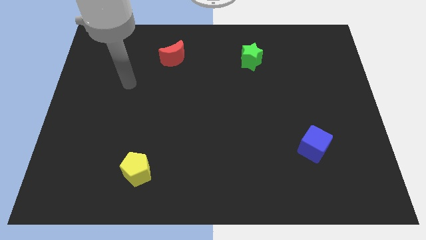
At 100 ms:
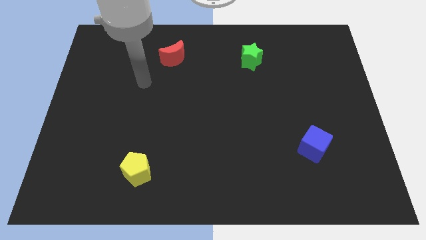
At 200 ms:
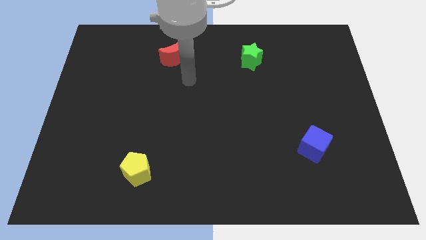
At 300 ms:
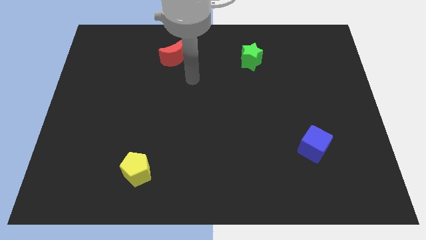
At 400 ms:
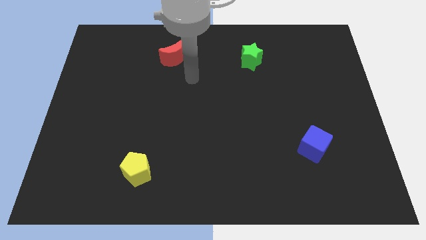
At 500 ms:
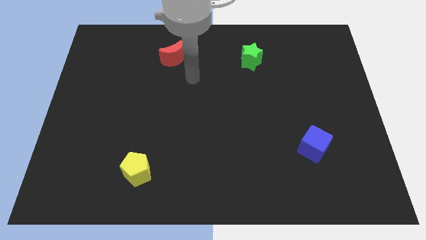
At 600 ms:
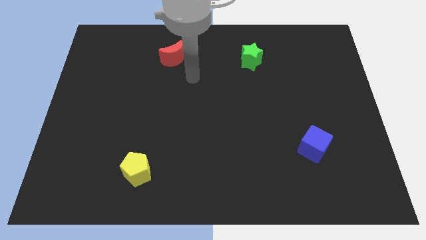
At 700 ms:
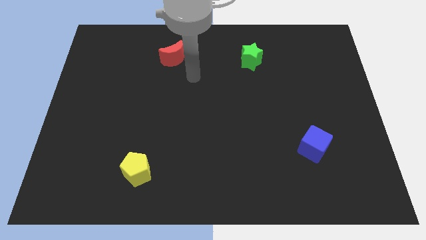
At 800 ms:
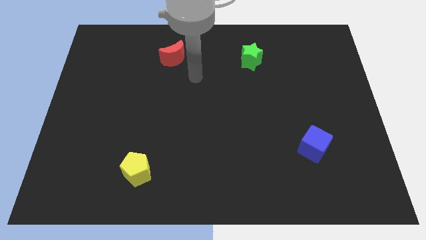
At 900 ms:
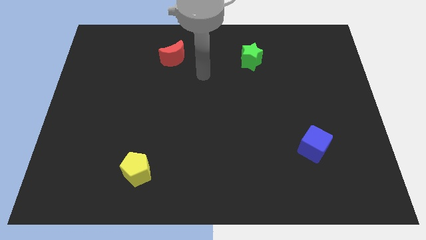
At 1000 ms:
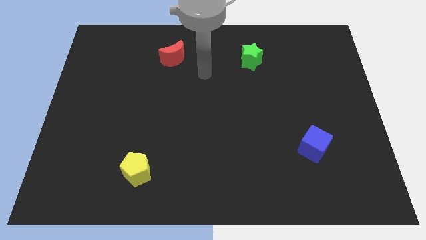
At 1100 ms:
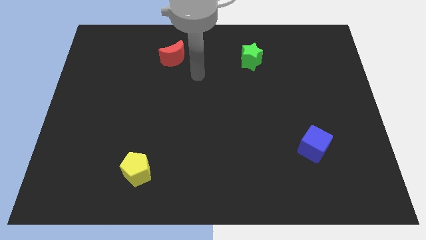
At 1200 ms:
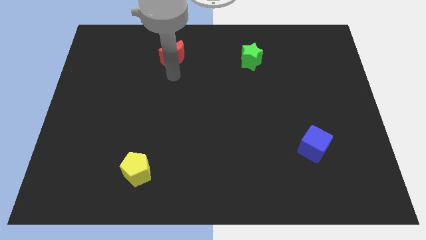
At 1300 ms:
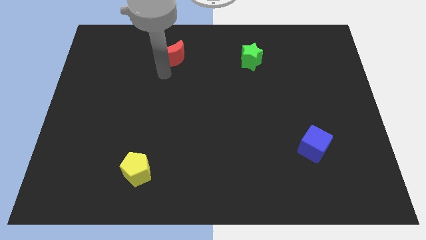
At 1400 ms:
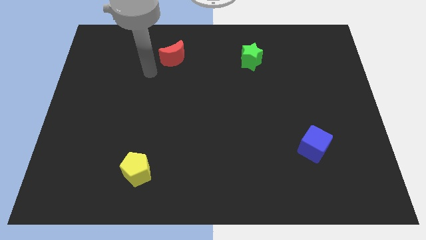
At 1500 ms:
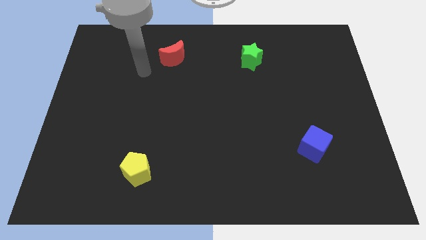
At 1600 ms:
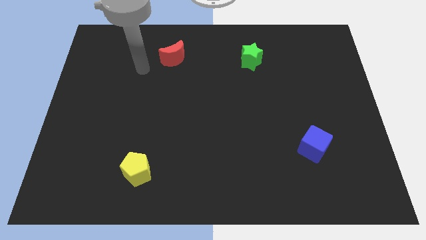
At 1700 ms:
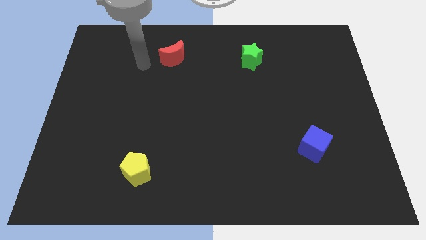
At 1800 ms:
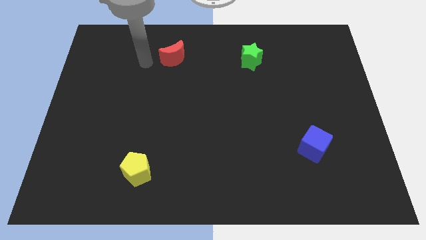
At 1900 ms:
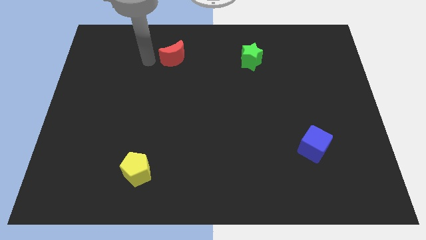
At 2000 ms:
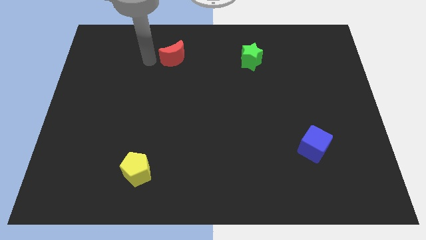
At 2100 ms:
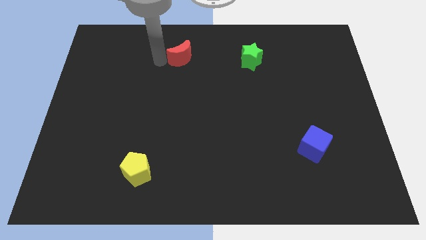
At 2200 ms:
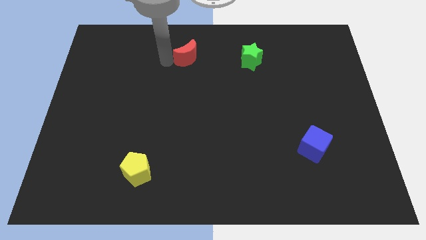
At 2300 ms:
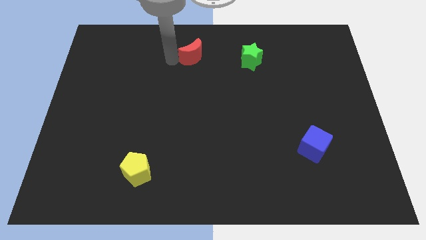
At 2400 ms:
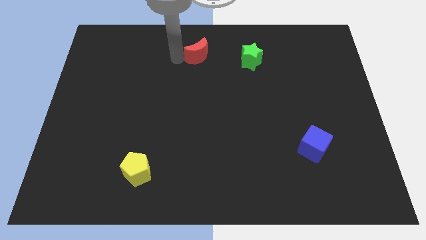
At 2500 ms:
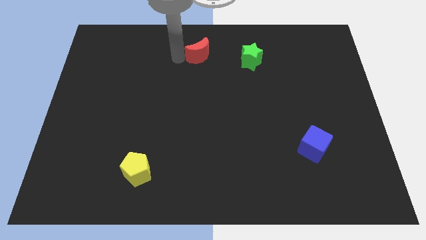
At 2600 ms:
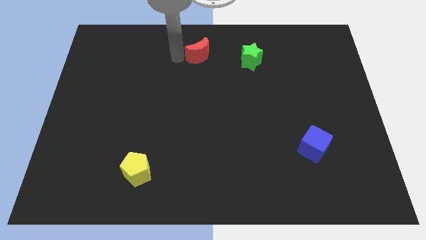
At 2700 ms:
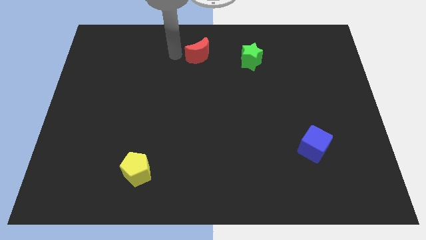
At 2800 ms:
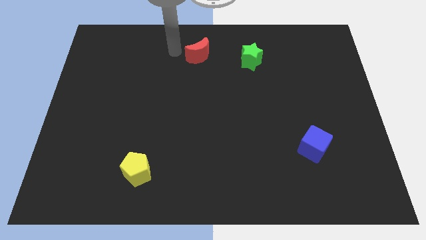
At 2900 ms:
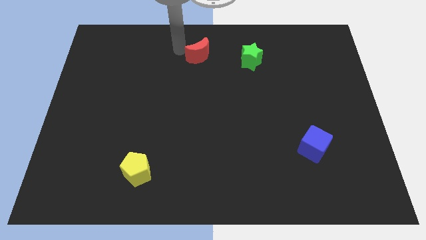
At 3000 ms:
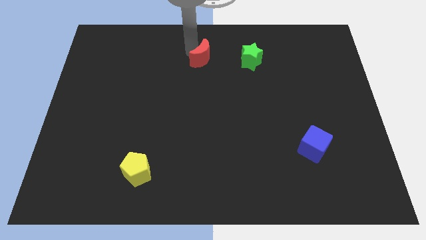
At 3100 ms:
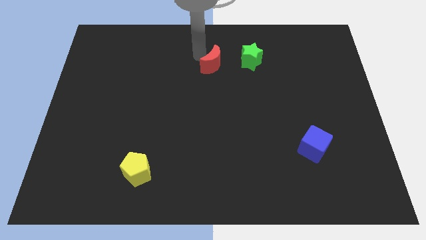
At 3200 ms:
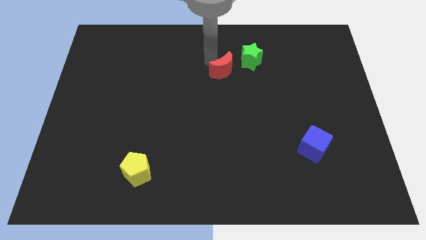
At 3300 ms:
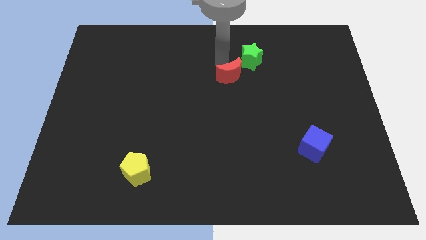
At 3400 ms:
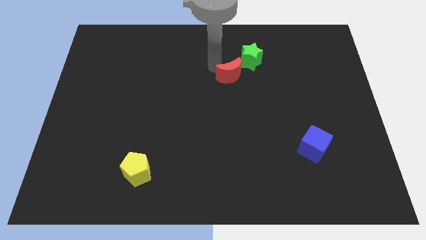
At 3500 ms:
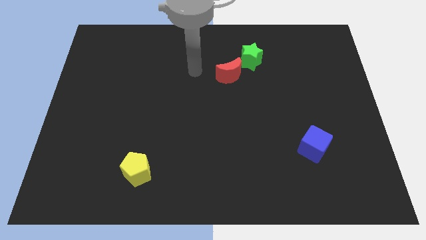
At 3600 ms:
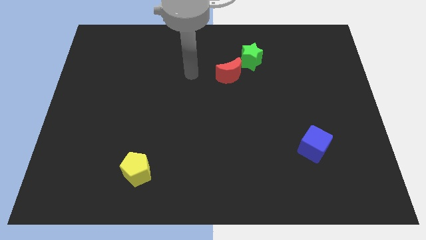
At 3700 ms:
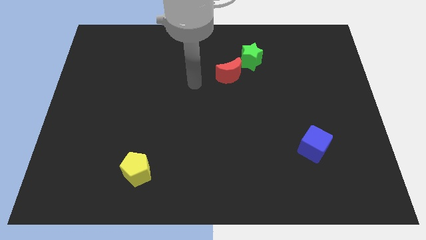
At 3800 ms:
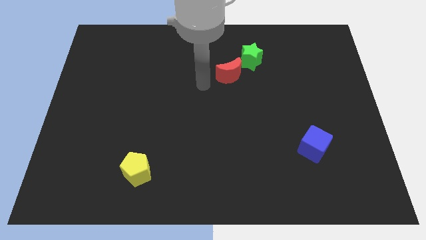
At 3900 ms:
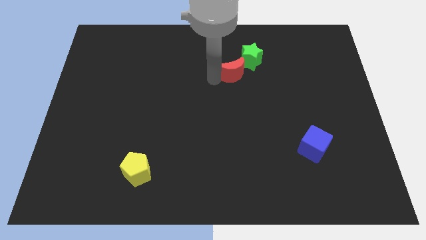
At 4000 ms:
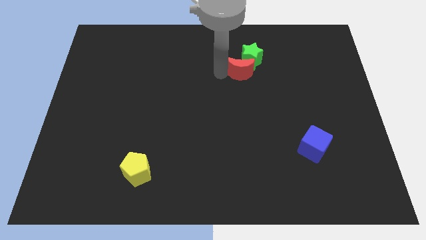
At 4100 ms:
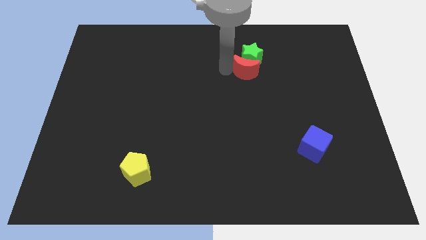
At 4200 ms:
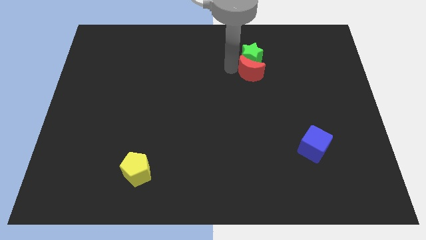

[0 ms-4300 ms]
move the red moon towards the green block

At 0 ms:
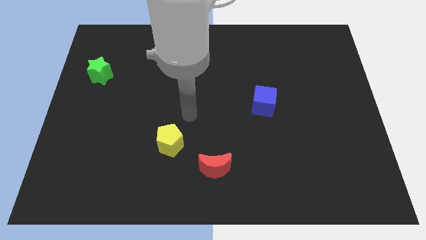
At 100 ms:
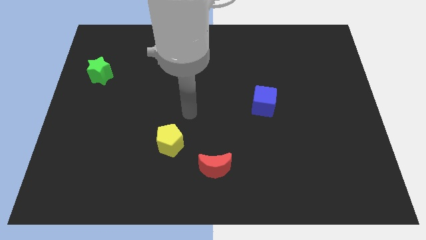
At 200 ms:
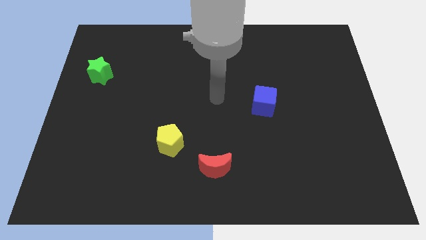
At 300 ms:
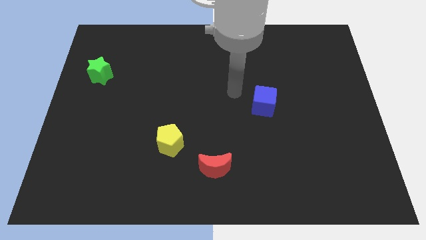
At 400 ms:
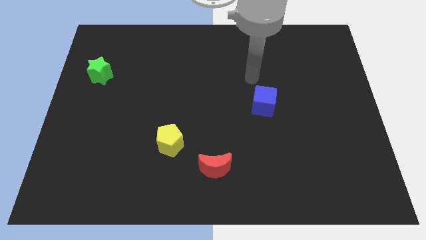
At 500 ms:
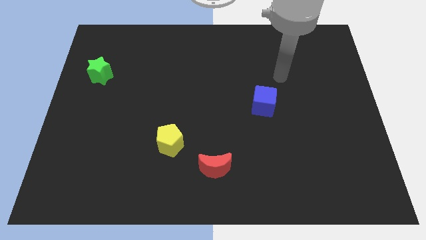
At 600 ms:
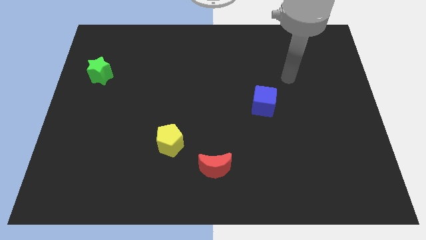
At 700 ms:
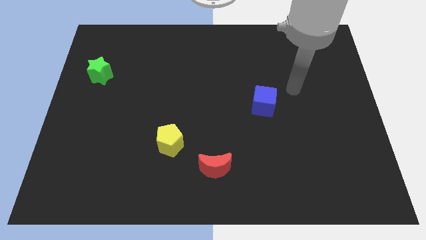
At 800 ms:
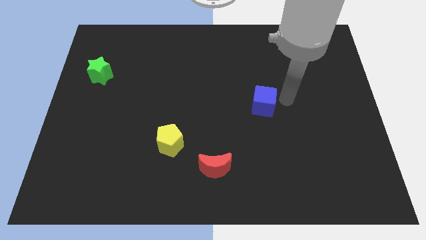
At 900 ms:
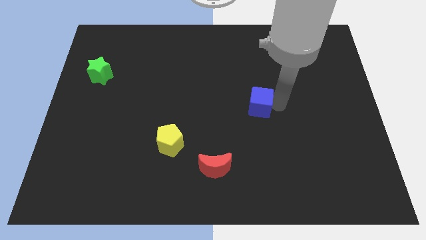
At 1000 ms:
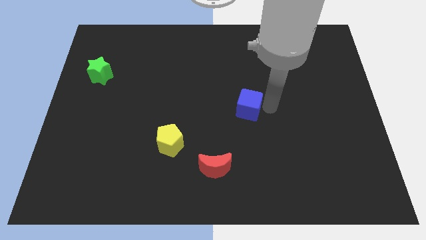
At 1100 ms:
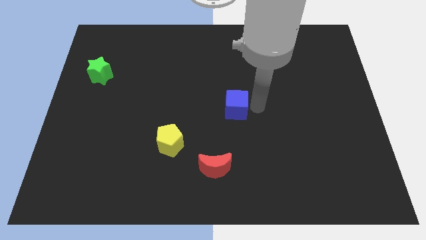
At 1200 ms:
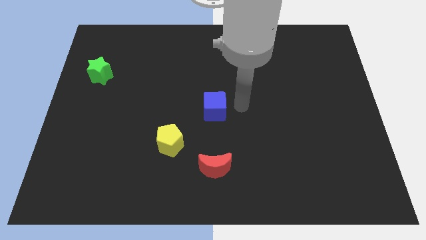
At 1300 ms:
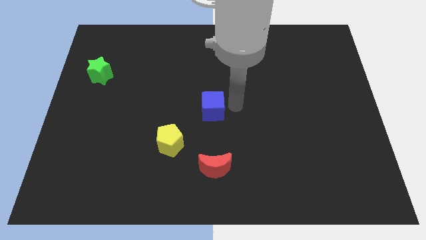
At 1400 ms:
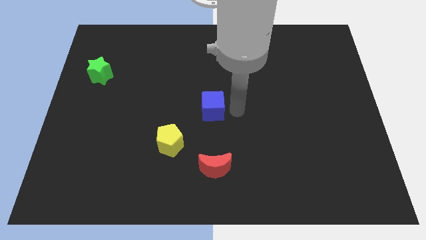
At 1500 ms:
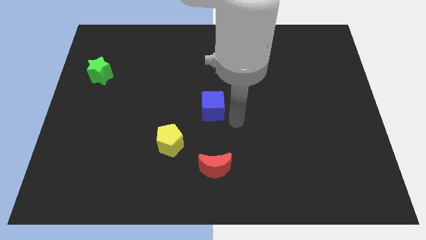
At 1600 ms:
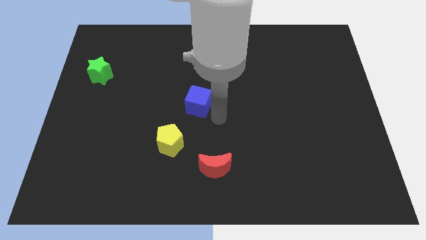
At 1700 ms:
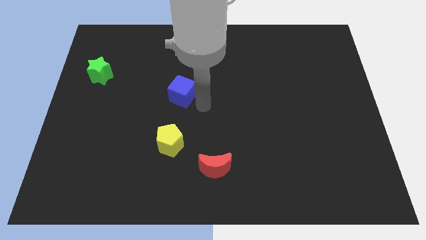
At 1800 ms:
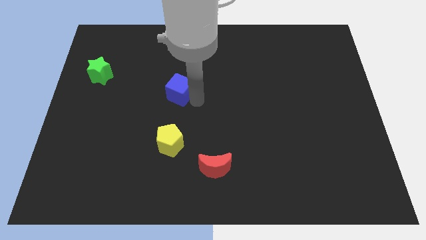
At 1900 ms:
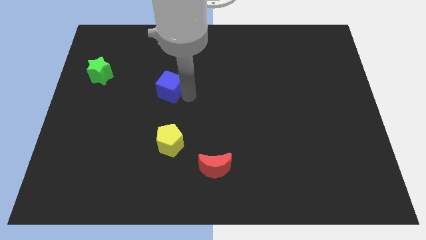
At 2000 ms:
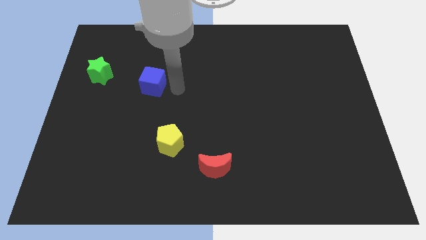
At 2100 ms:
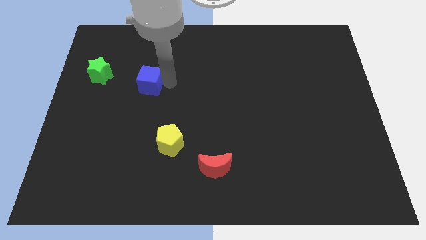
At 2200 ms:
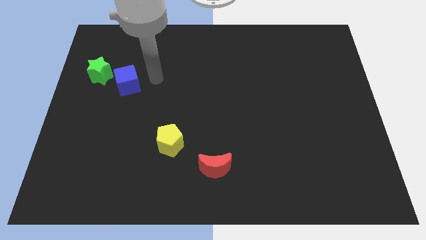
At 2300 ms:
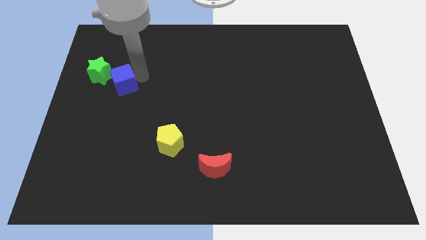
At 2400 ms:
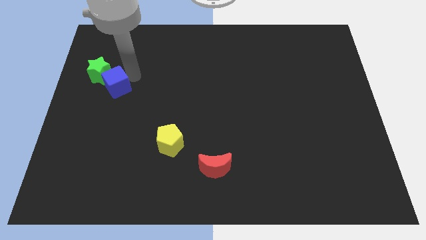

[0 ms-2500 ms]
put the blue block to the star

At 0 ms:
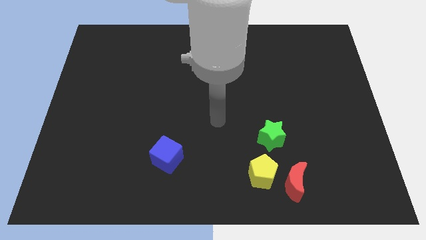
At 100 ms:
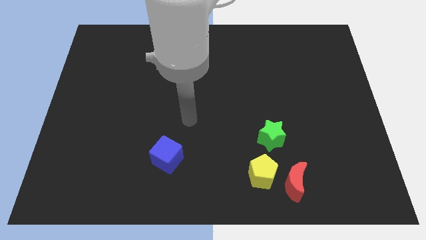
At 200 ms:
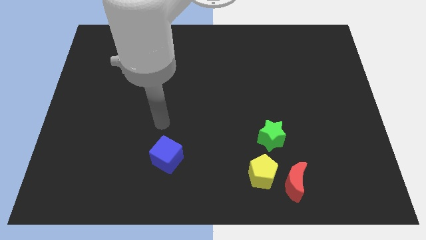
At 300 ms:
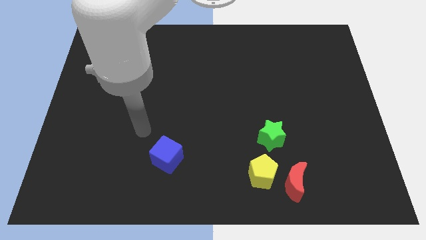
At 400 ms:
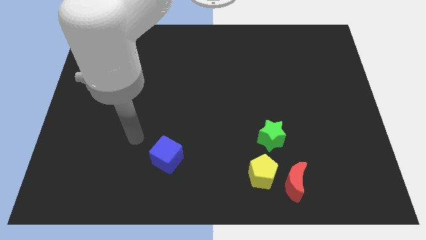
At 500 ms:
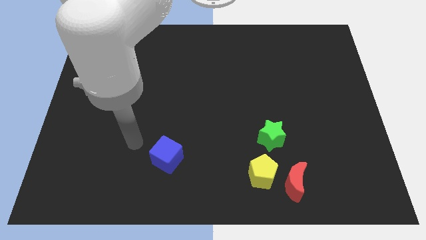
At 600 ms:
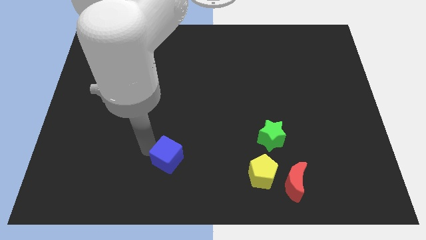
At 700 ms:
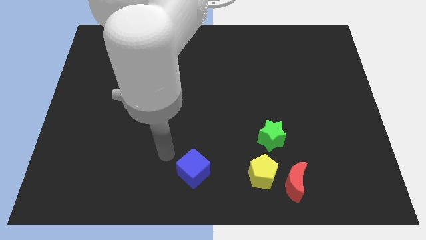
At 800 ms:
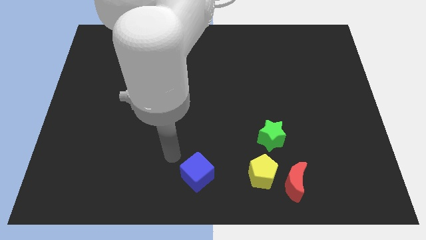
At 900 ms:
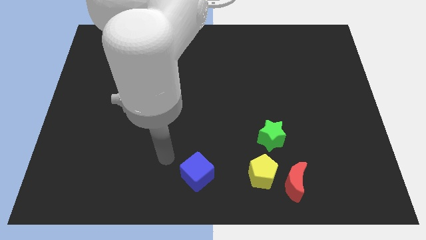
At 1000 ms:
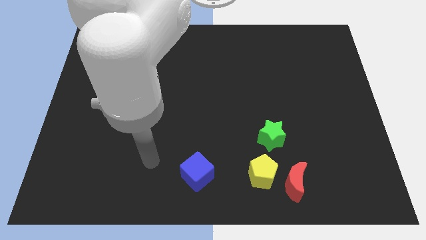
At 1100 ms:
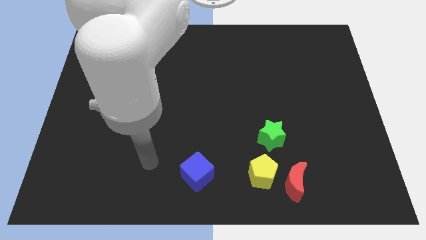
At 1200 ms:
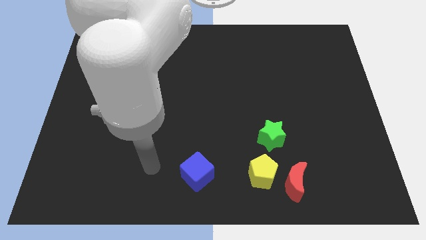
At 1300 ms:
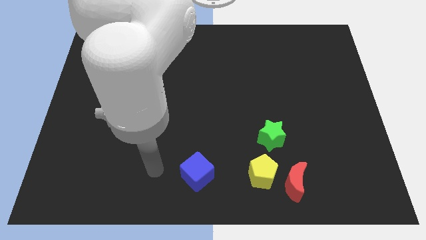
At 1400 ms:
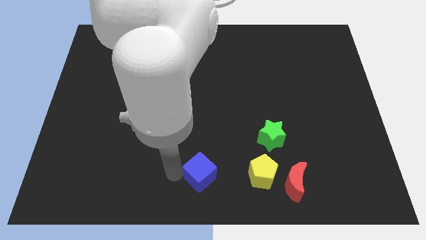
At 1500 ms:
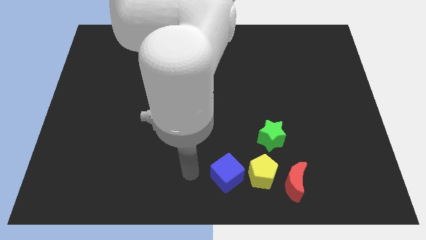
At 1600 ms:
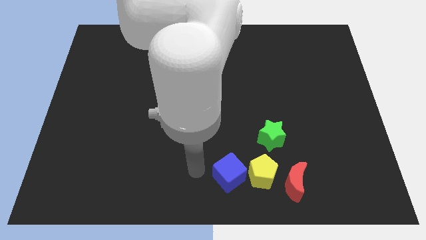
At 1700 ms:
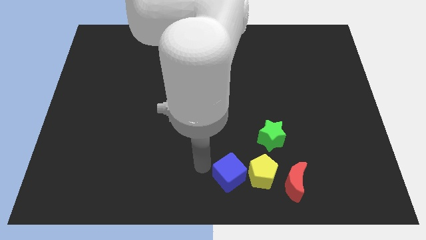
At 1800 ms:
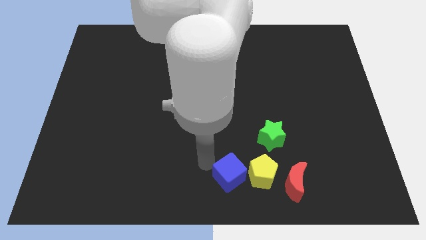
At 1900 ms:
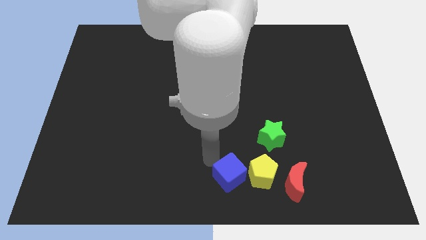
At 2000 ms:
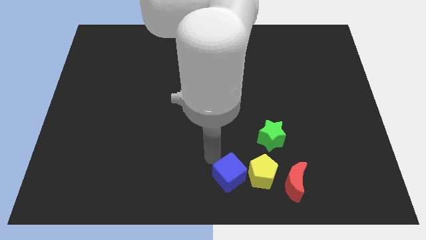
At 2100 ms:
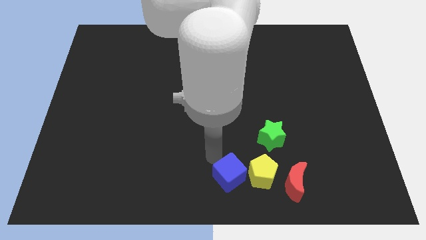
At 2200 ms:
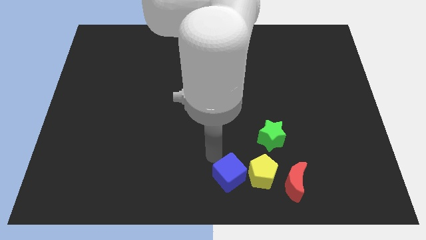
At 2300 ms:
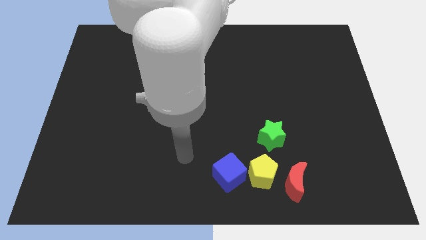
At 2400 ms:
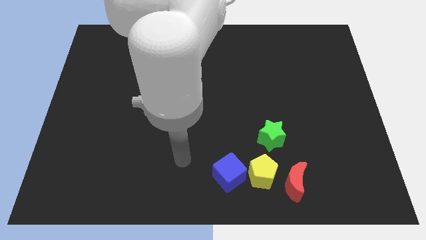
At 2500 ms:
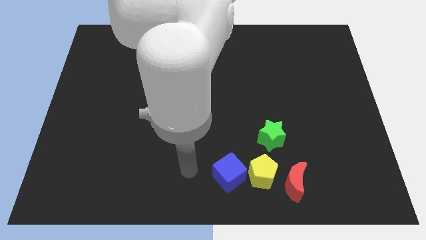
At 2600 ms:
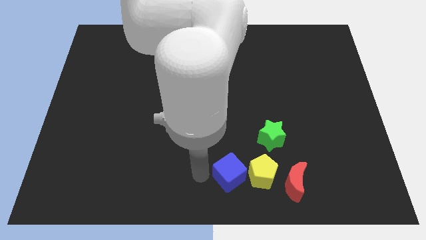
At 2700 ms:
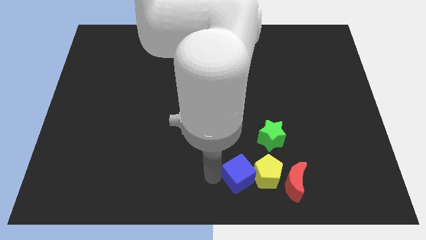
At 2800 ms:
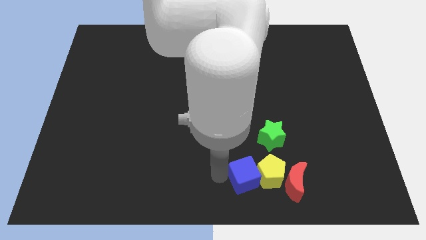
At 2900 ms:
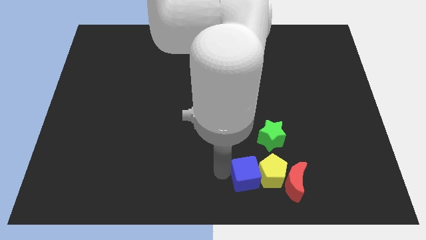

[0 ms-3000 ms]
move the blue cube close to the pentagon
